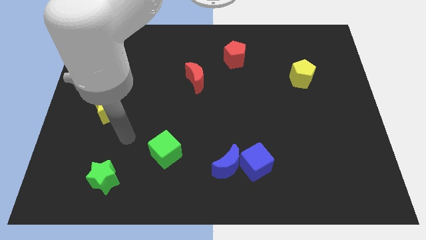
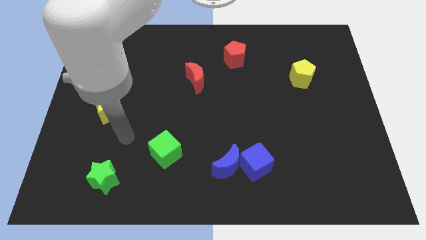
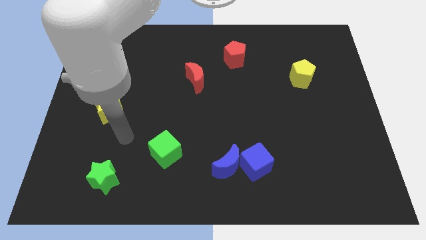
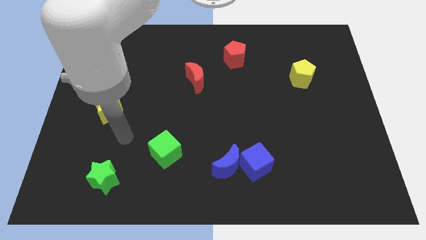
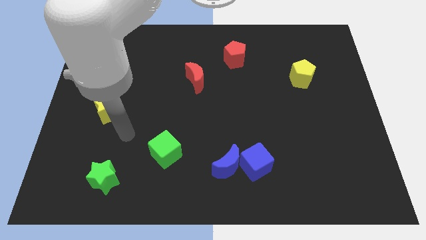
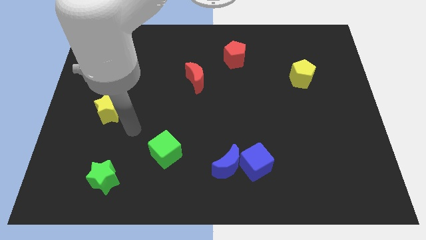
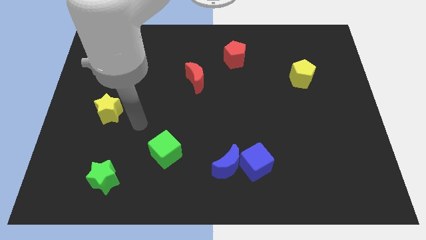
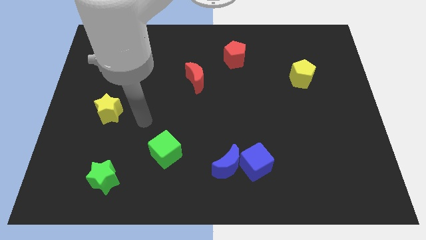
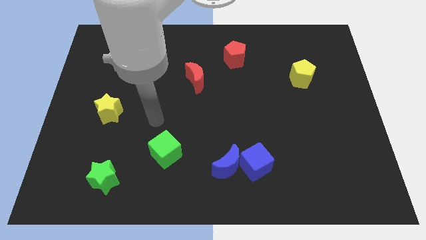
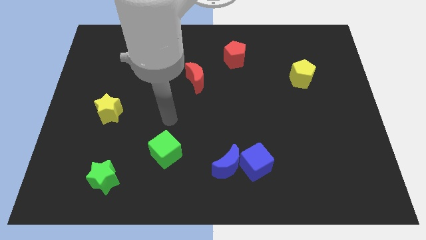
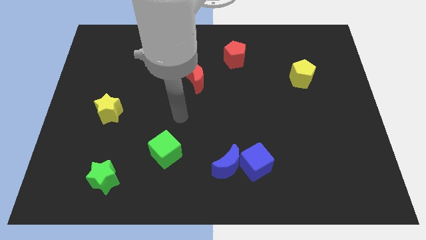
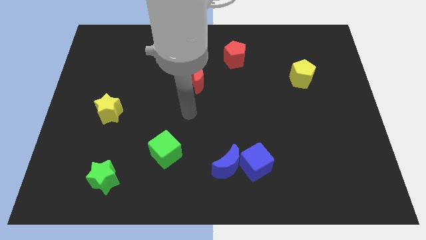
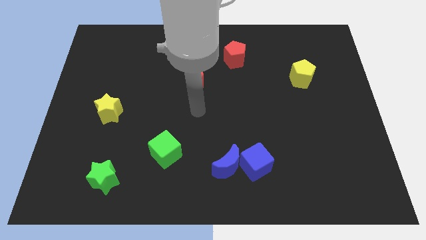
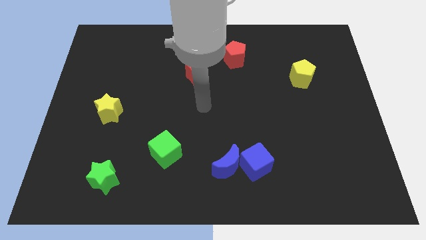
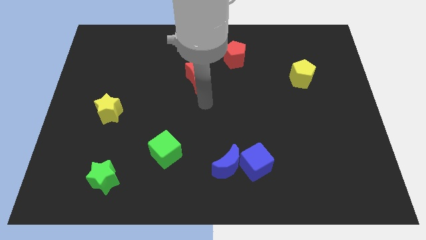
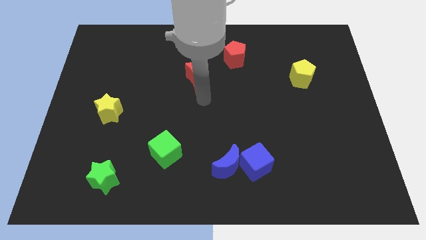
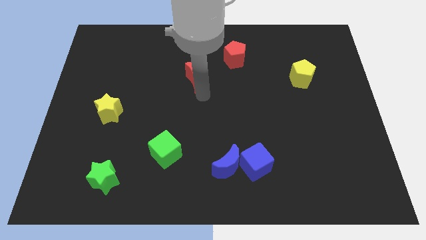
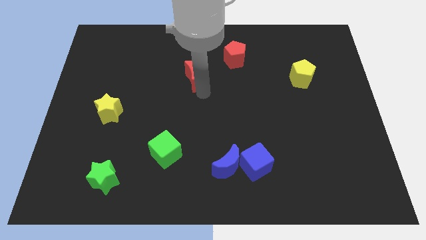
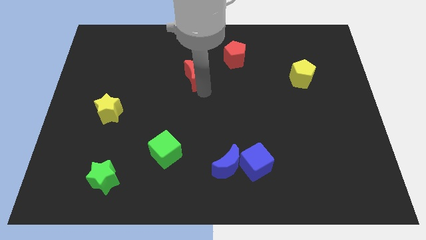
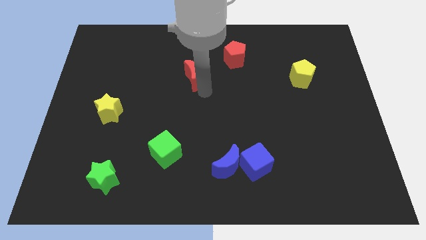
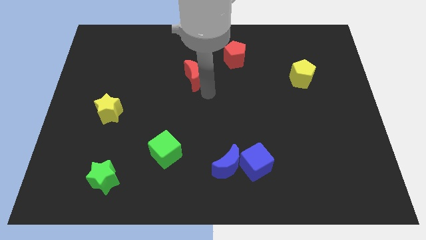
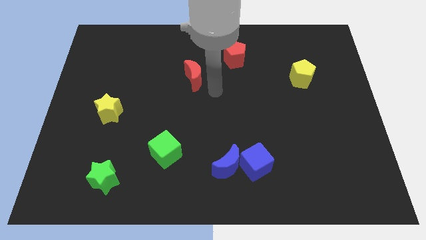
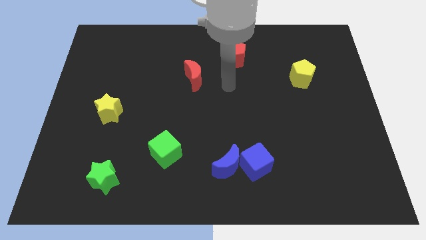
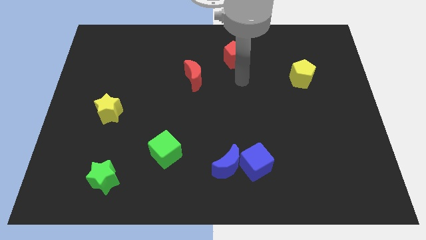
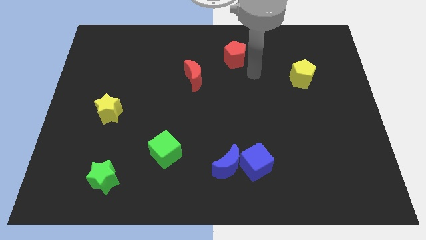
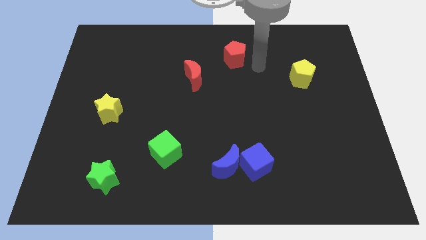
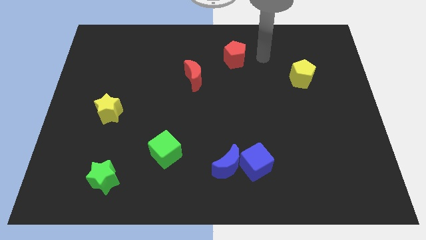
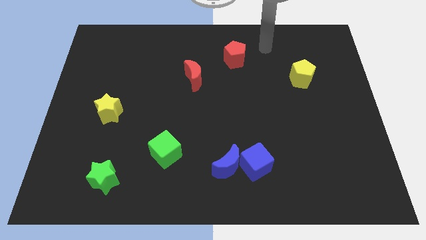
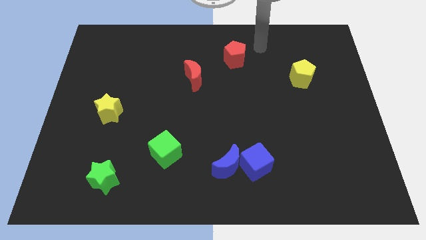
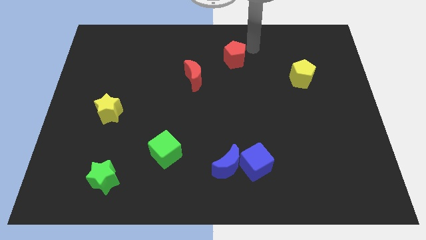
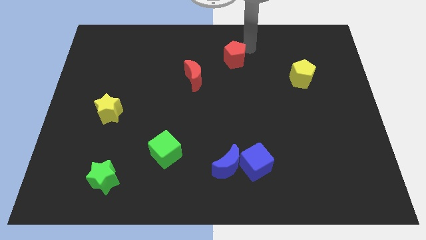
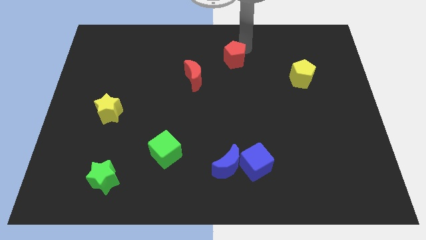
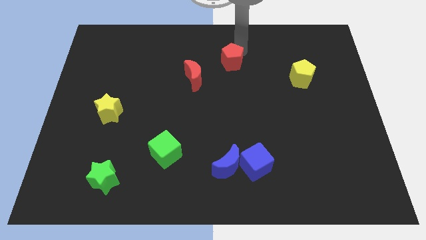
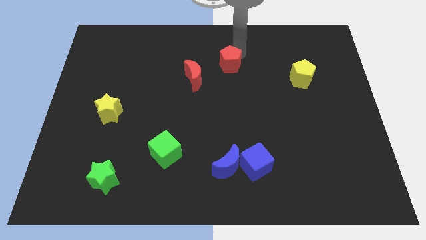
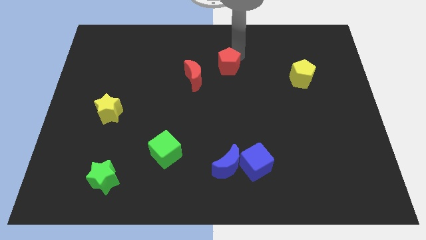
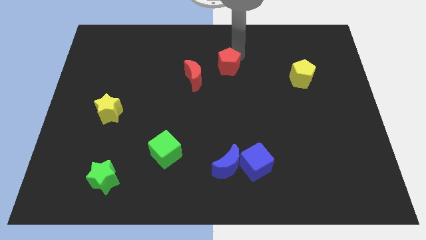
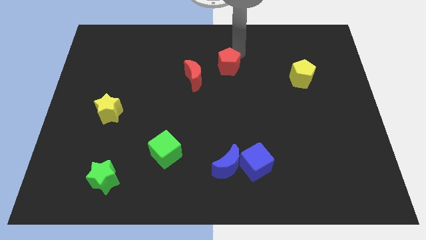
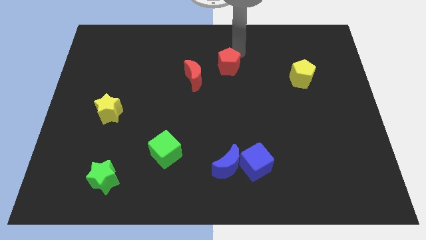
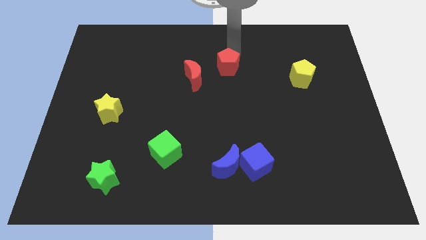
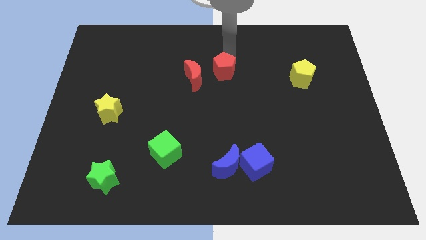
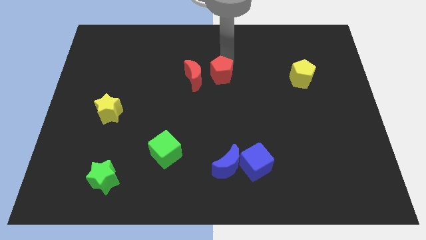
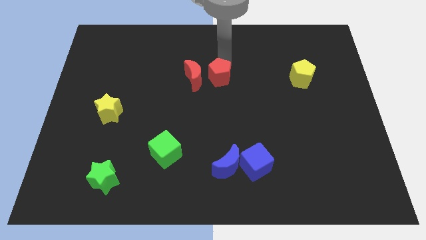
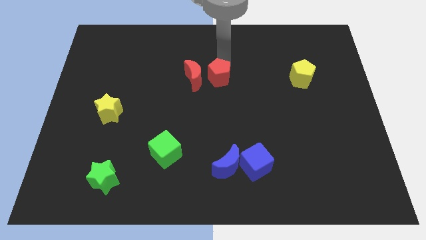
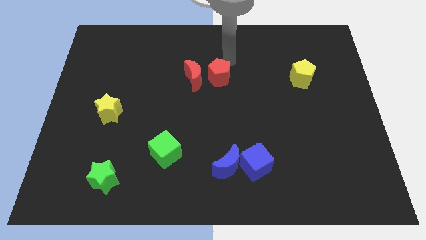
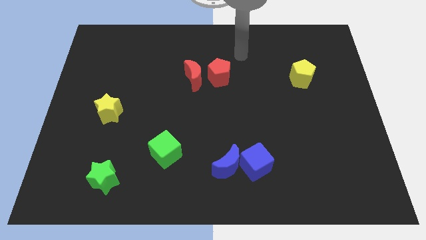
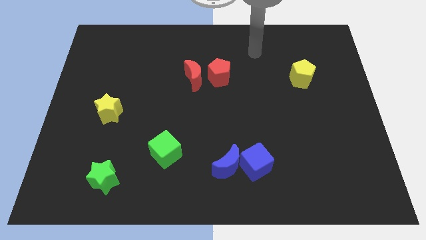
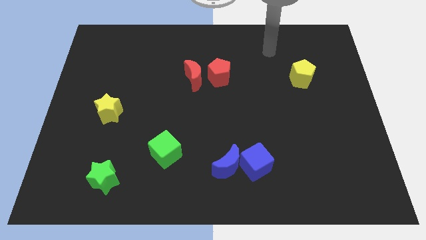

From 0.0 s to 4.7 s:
place red pentagon right of the red crescent

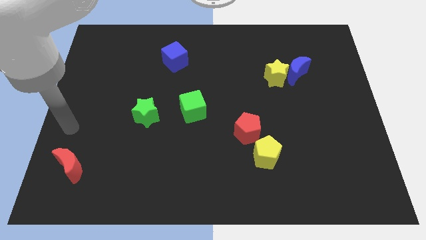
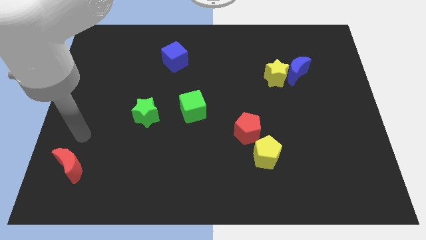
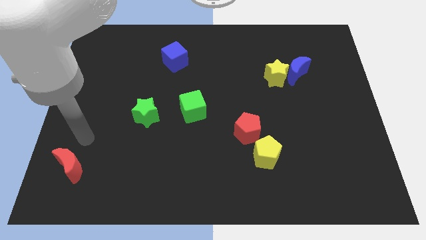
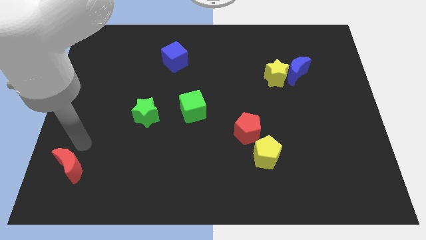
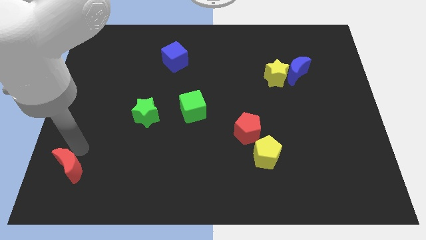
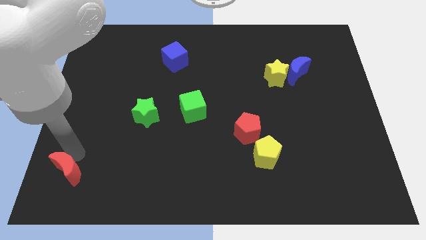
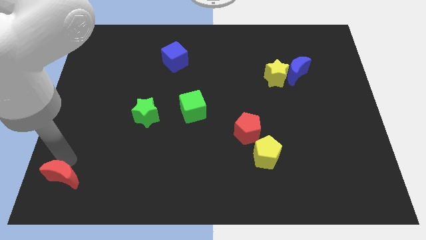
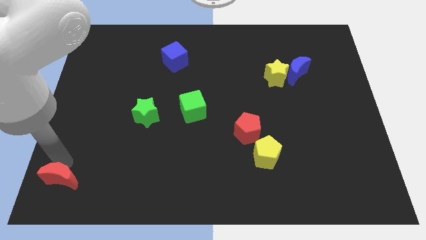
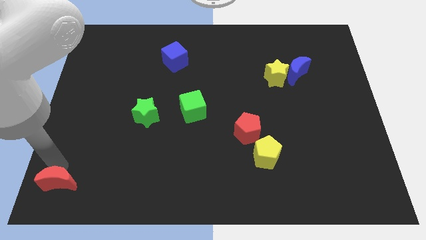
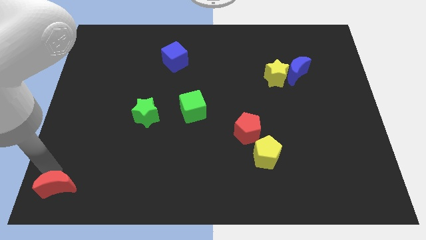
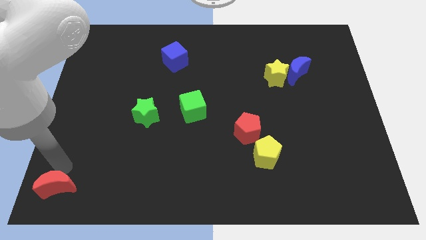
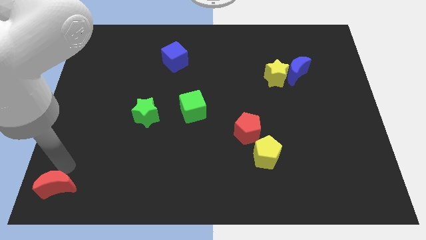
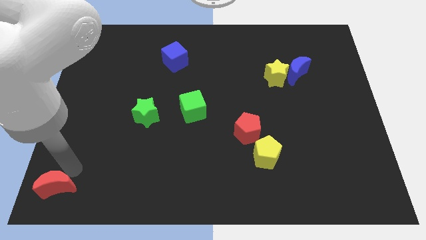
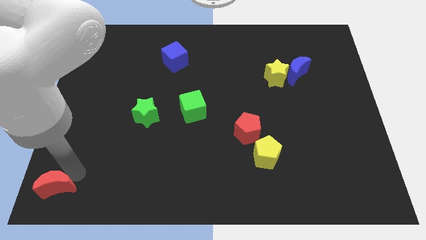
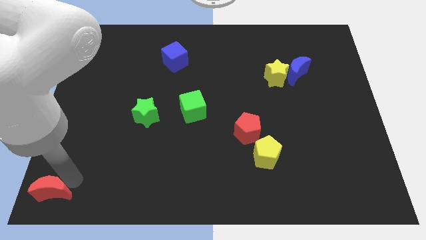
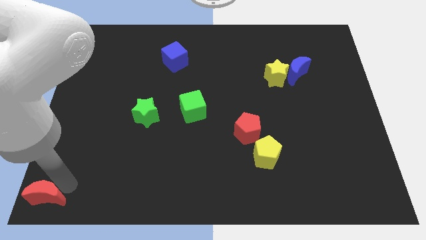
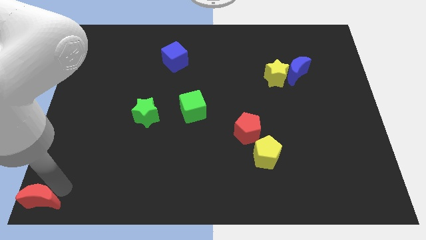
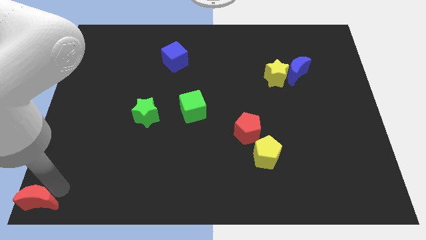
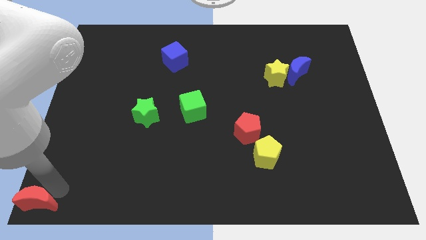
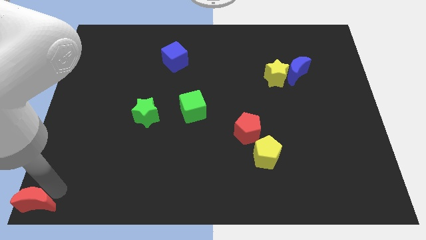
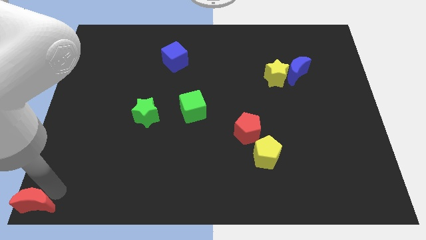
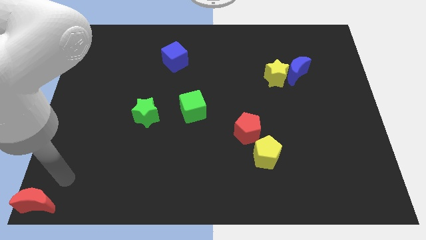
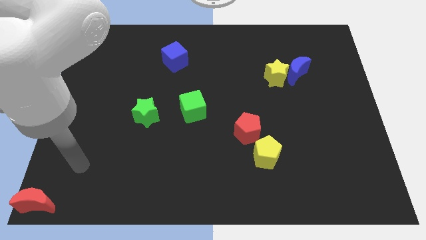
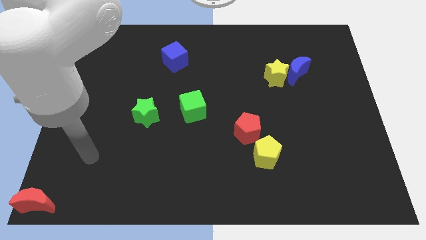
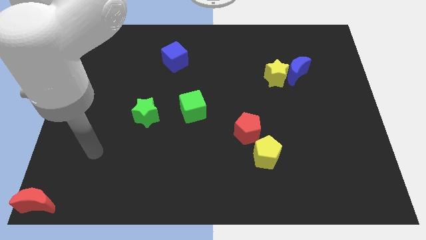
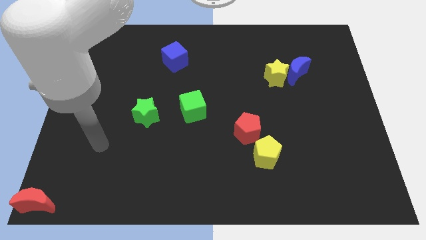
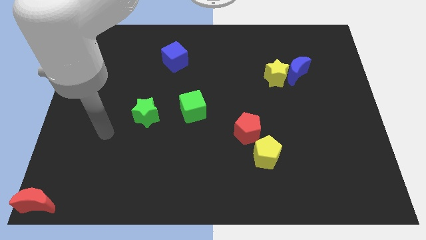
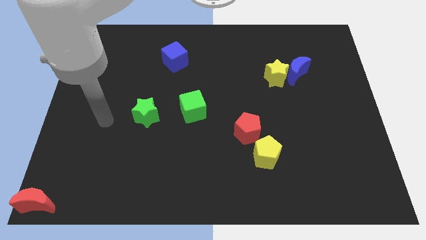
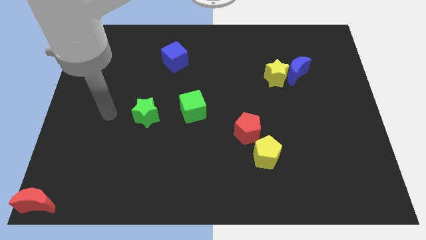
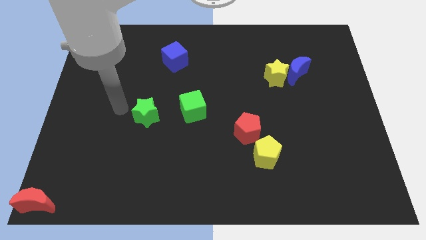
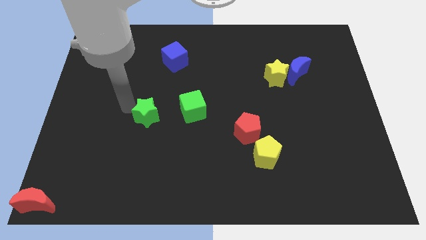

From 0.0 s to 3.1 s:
push the red crescent to the bottom left

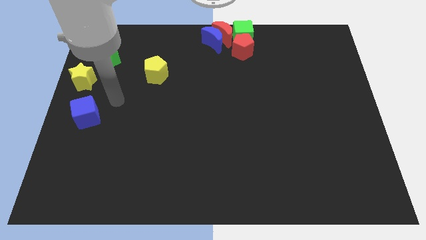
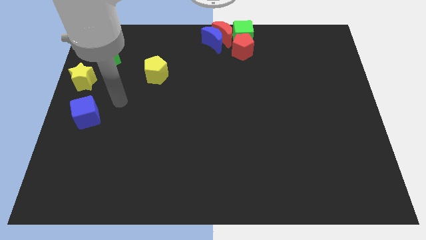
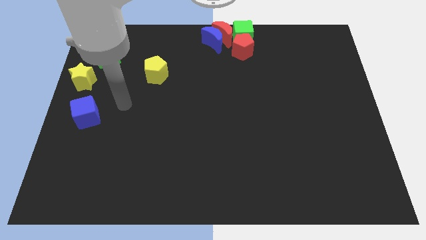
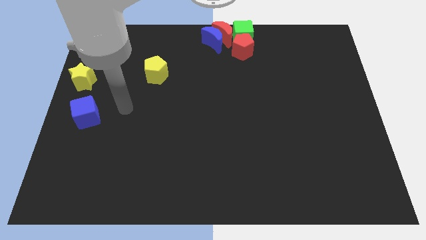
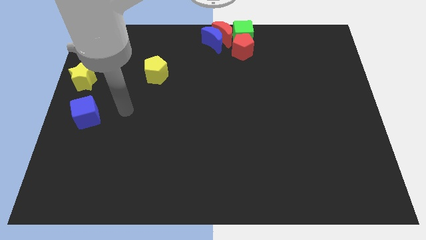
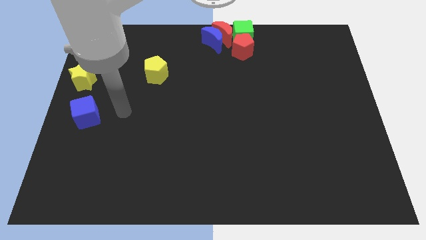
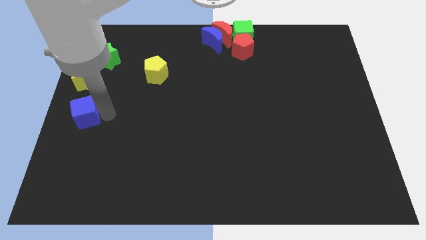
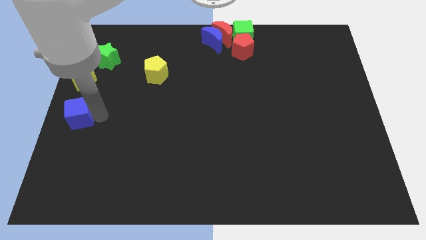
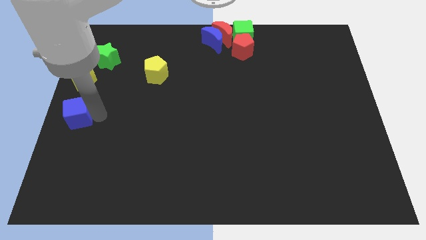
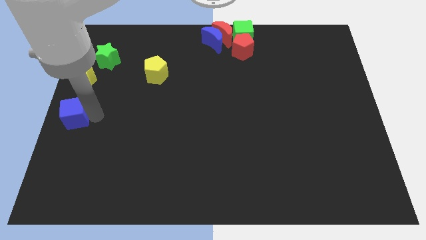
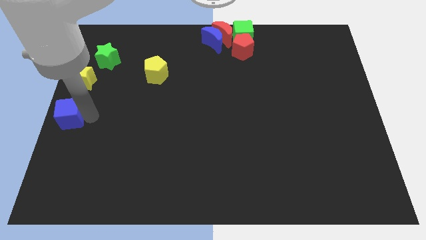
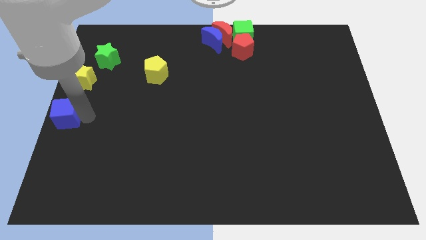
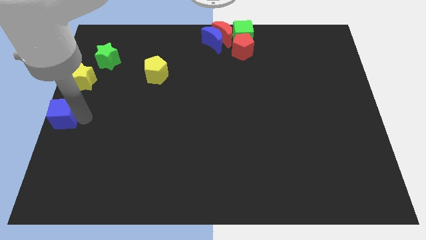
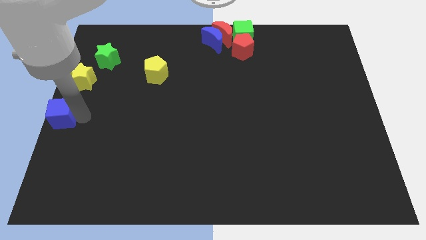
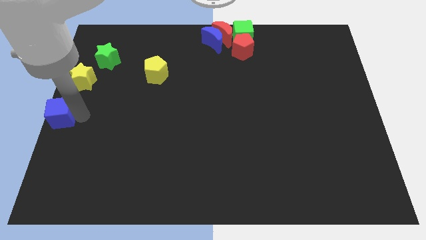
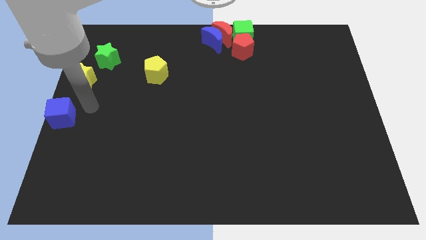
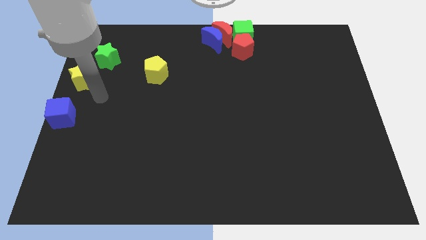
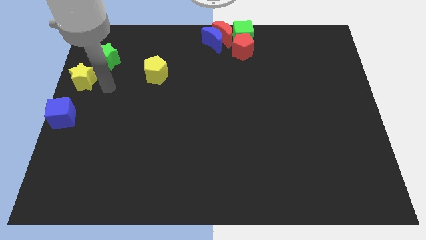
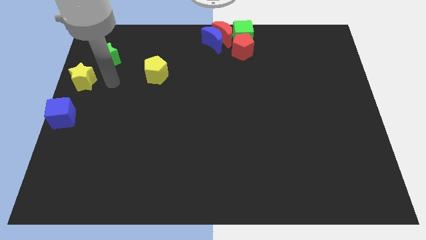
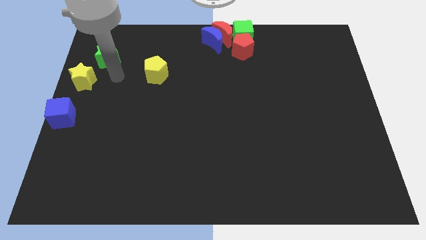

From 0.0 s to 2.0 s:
move the blue cube to the left center
